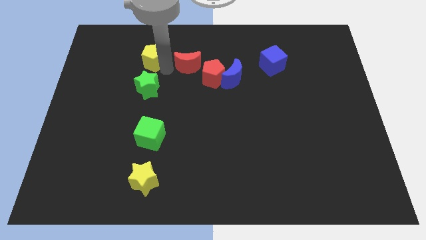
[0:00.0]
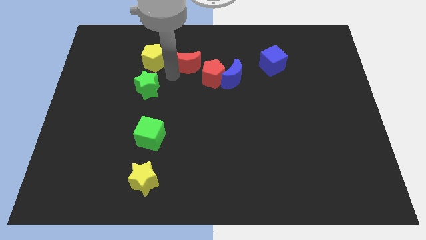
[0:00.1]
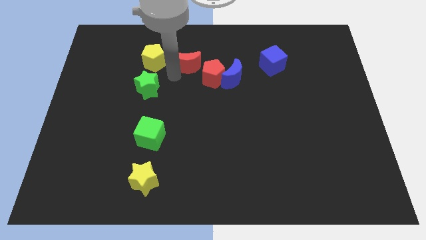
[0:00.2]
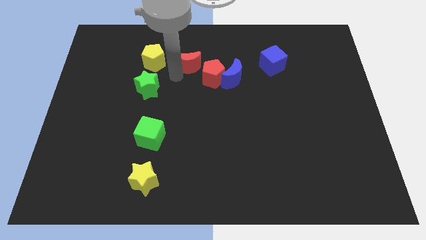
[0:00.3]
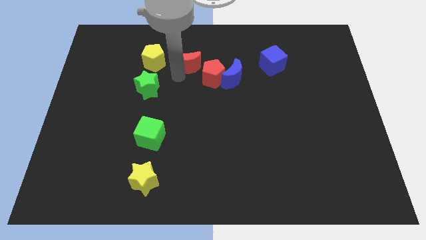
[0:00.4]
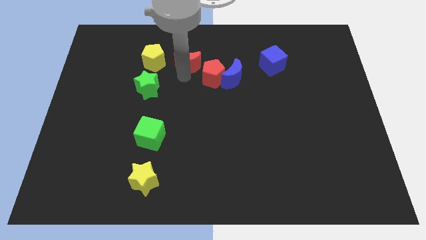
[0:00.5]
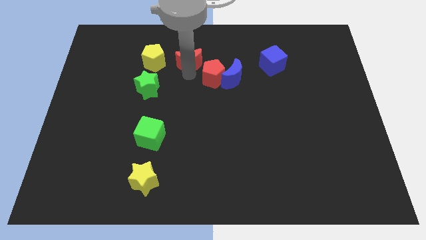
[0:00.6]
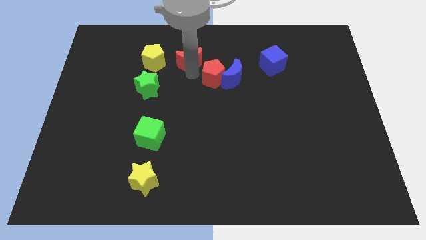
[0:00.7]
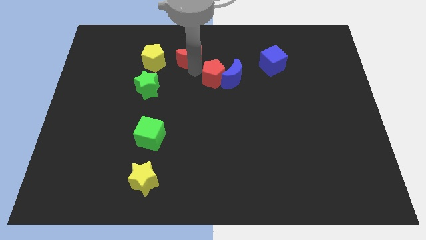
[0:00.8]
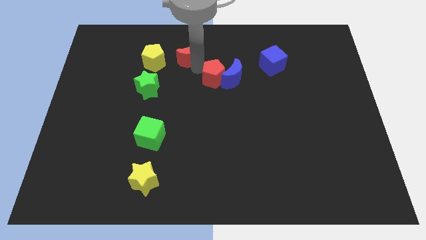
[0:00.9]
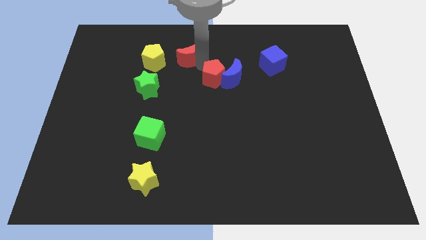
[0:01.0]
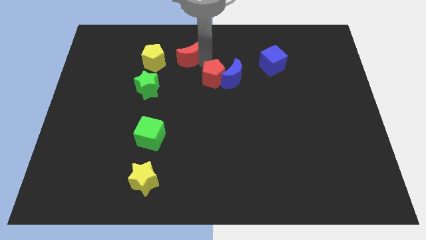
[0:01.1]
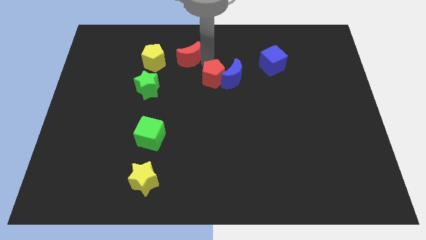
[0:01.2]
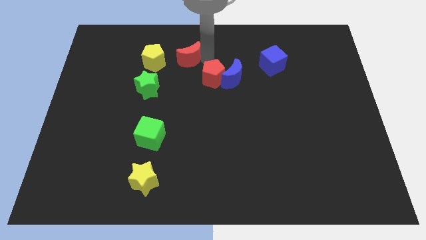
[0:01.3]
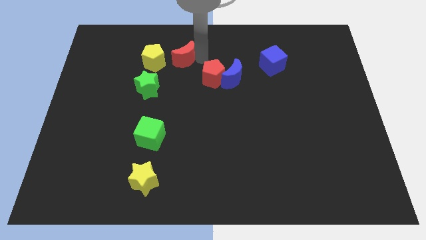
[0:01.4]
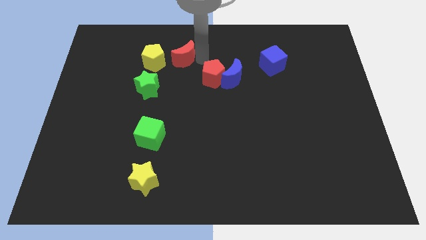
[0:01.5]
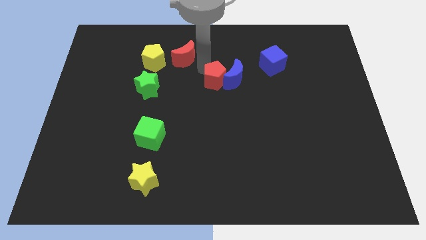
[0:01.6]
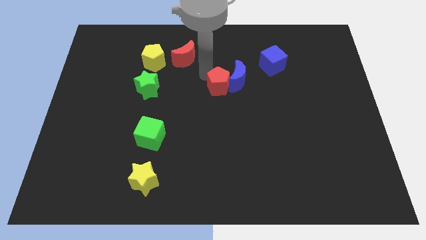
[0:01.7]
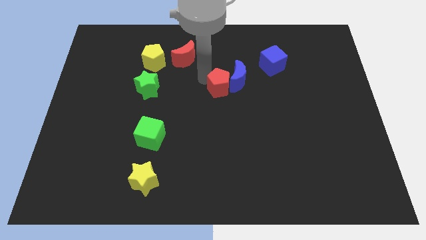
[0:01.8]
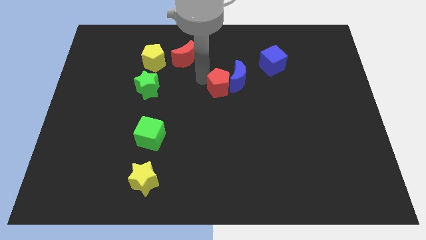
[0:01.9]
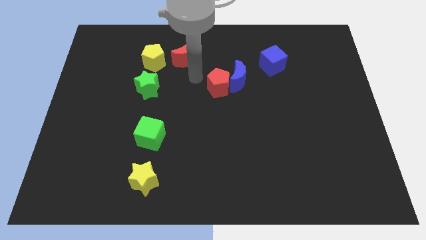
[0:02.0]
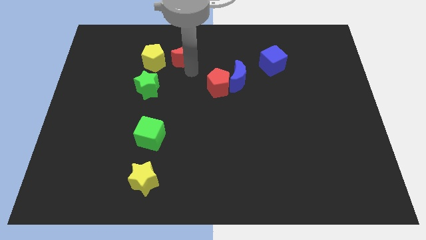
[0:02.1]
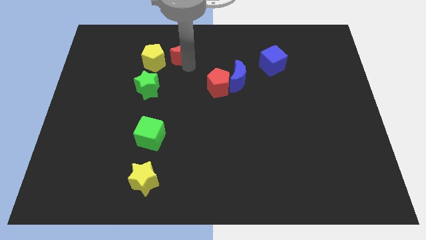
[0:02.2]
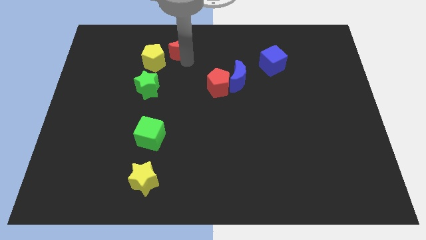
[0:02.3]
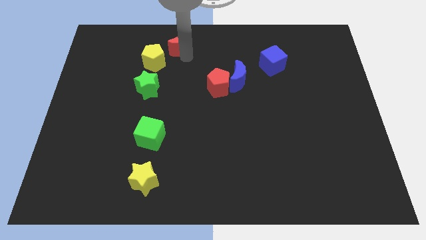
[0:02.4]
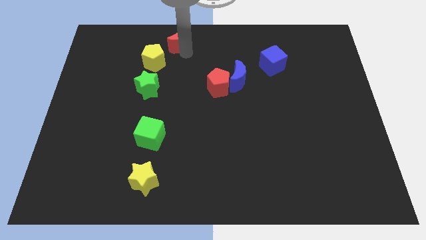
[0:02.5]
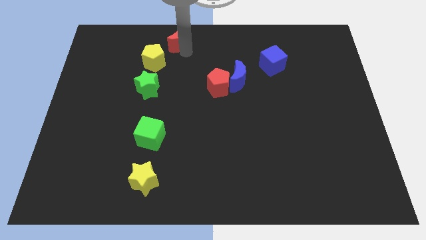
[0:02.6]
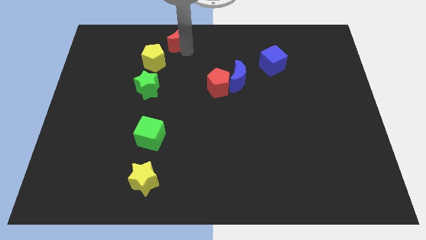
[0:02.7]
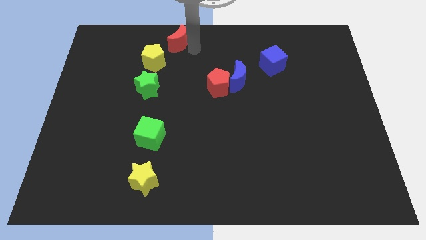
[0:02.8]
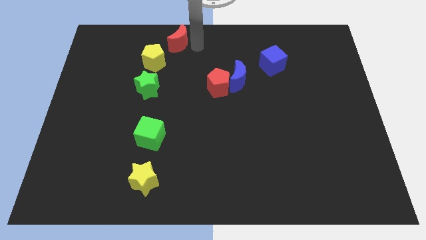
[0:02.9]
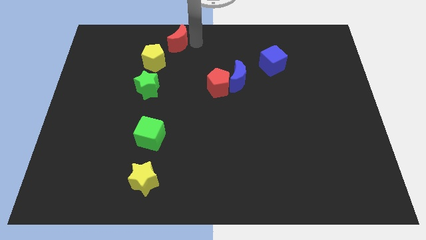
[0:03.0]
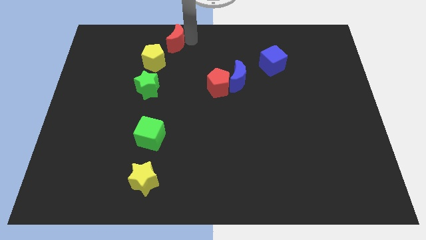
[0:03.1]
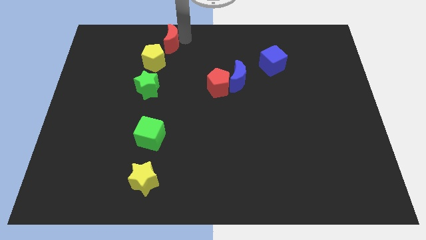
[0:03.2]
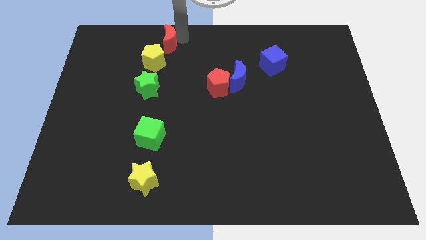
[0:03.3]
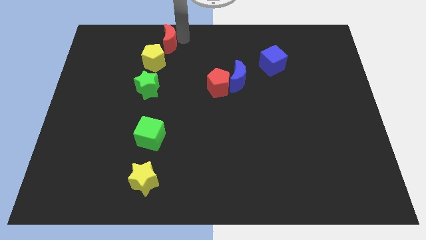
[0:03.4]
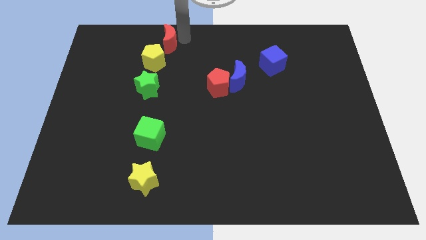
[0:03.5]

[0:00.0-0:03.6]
move the red crescent to the top of the yellow pentagon

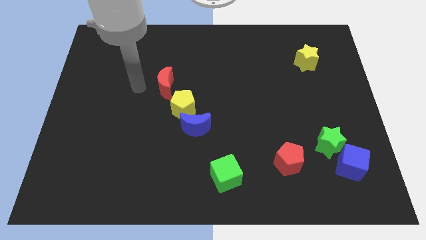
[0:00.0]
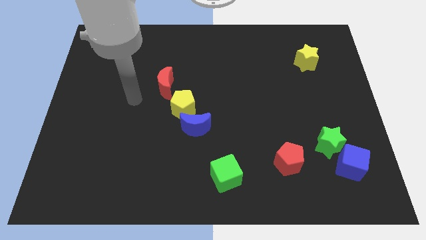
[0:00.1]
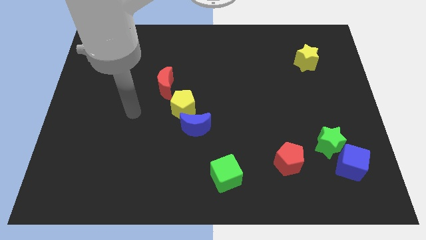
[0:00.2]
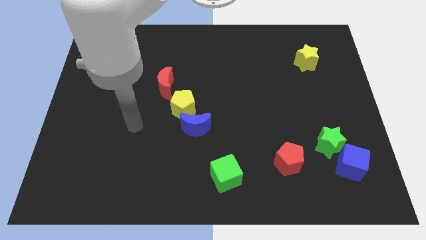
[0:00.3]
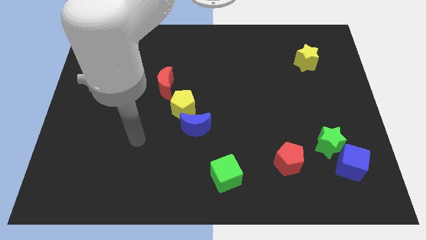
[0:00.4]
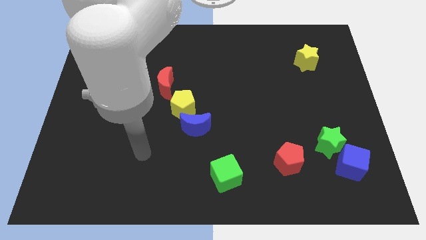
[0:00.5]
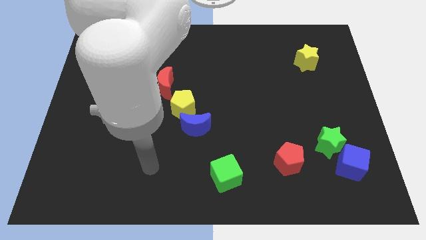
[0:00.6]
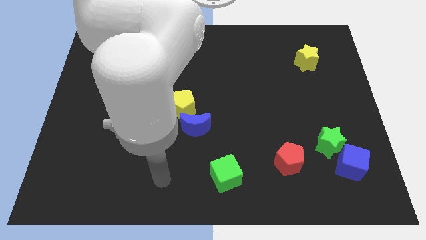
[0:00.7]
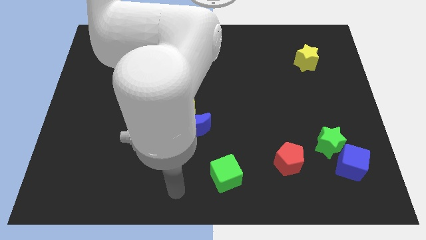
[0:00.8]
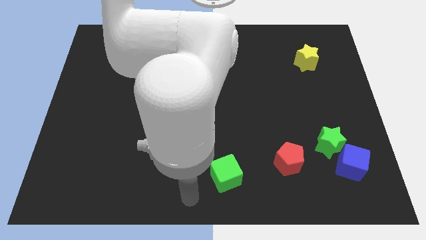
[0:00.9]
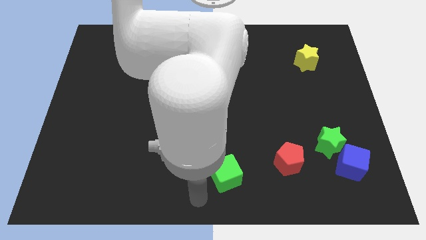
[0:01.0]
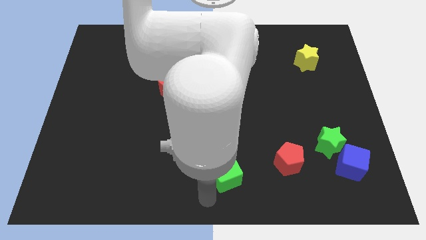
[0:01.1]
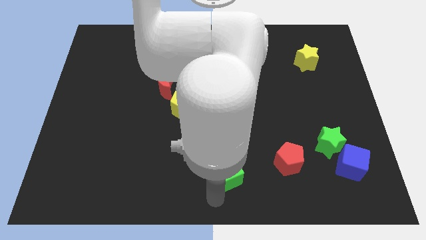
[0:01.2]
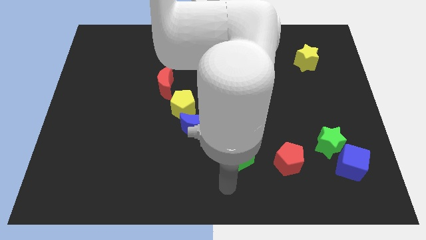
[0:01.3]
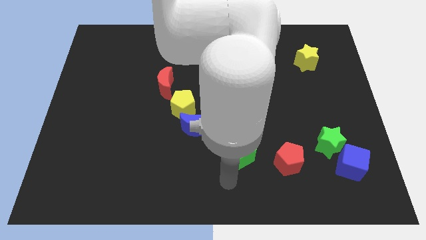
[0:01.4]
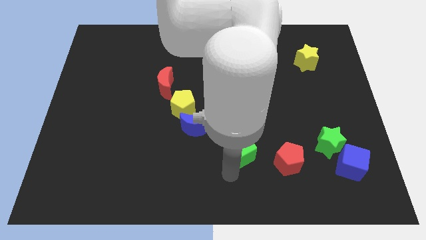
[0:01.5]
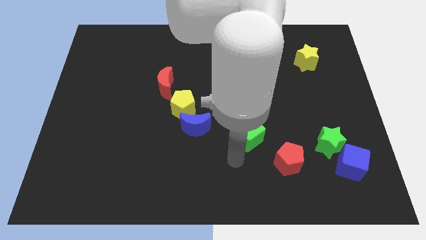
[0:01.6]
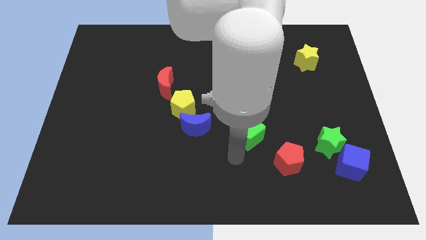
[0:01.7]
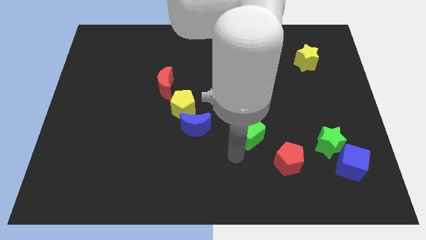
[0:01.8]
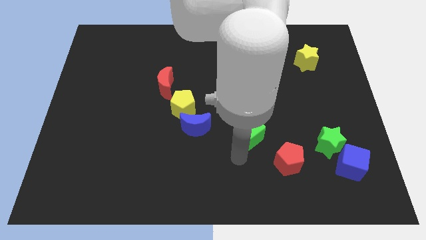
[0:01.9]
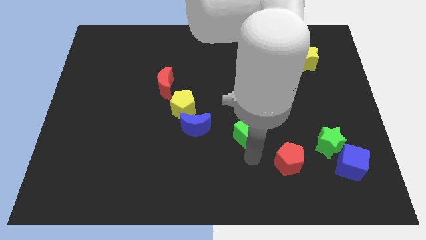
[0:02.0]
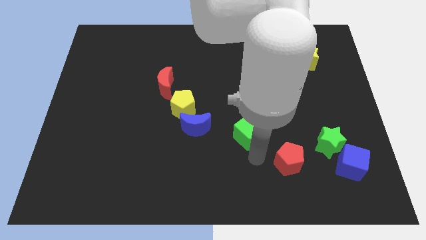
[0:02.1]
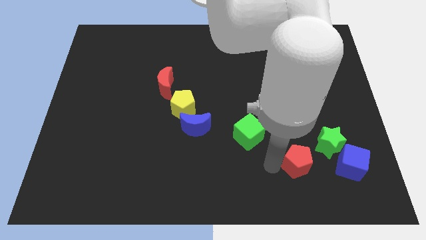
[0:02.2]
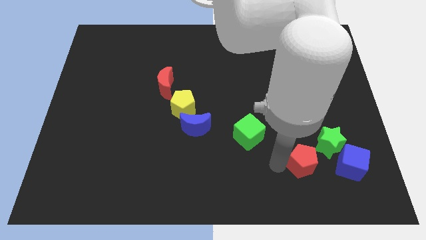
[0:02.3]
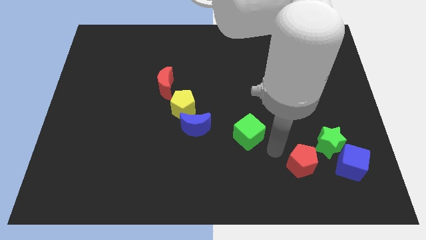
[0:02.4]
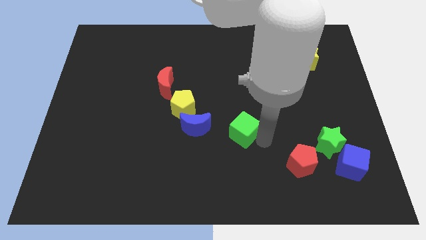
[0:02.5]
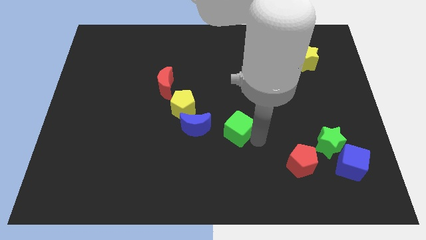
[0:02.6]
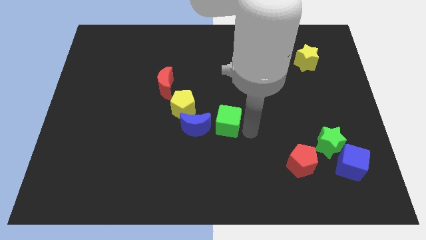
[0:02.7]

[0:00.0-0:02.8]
move arm near green cube

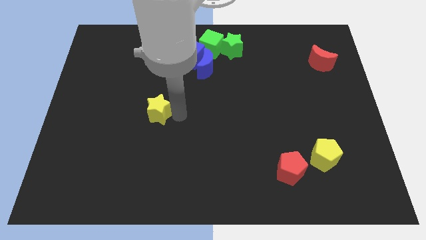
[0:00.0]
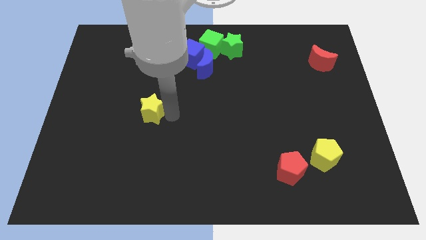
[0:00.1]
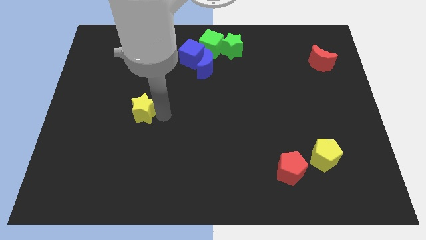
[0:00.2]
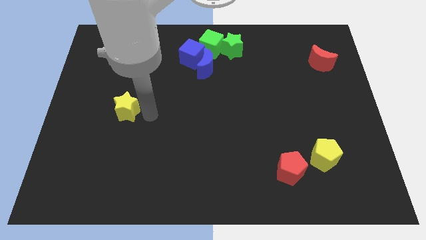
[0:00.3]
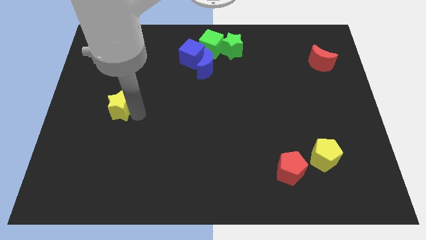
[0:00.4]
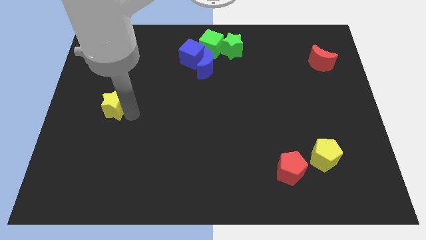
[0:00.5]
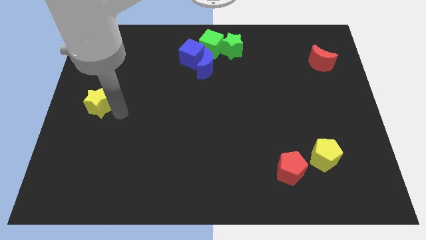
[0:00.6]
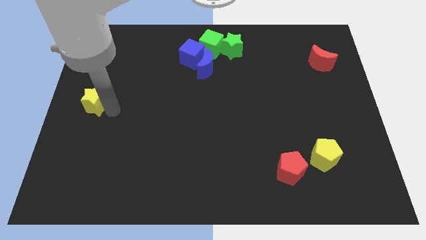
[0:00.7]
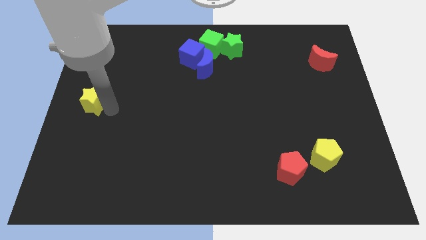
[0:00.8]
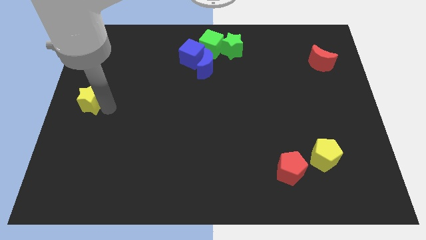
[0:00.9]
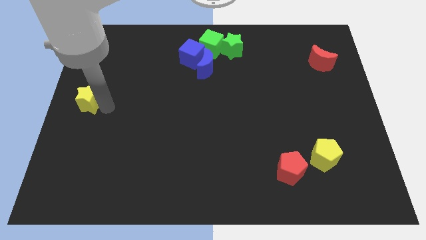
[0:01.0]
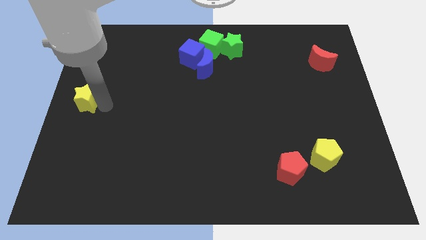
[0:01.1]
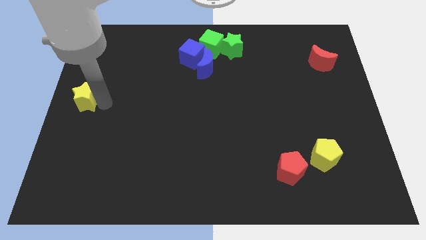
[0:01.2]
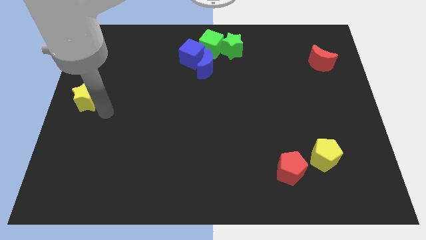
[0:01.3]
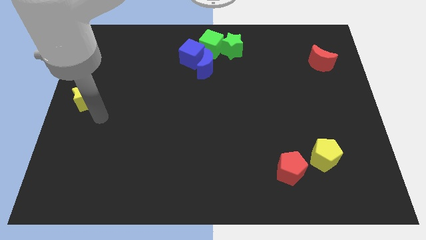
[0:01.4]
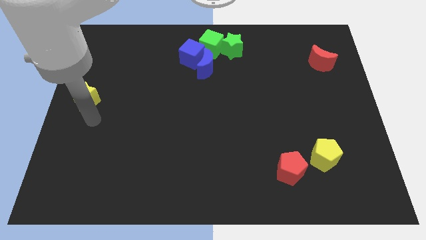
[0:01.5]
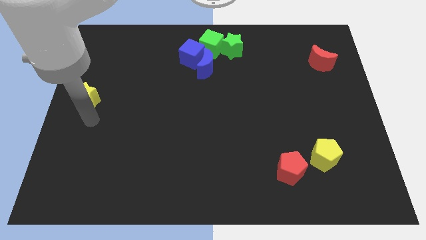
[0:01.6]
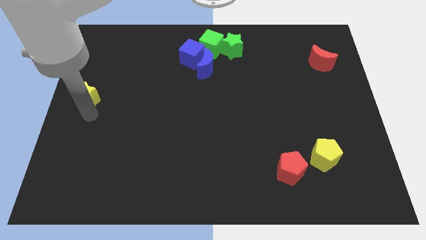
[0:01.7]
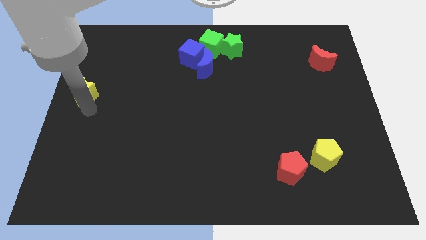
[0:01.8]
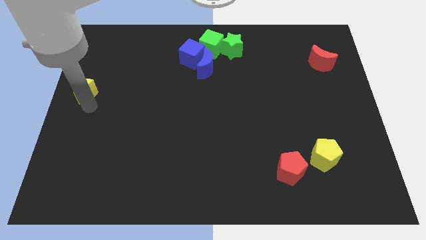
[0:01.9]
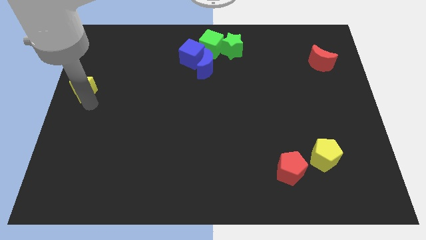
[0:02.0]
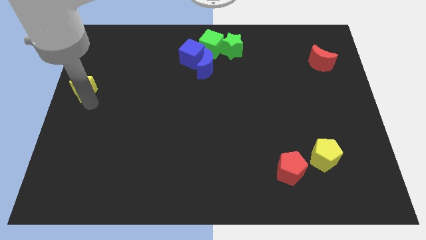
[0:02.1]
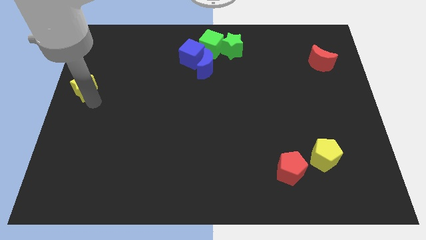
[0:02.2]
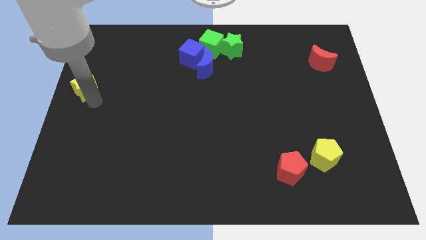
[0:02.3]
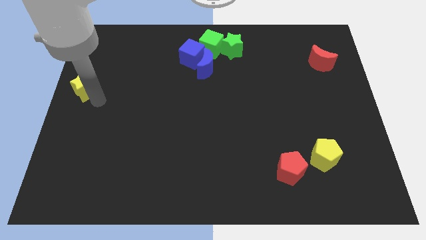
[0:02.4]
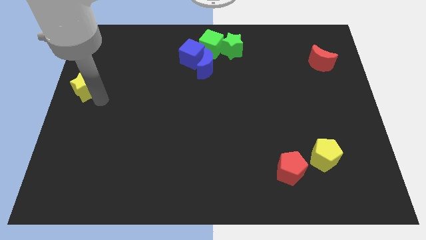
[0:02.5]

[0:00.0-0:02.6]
place yellow star on the left center of the board
